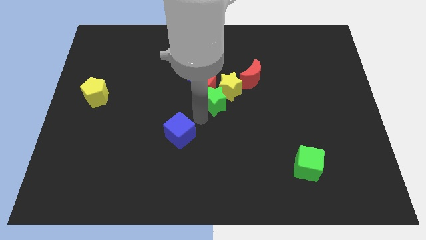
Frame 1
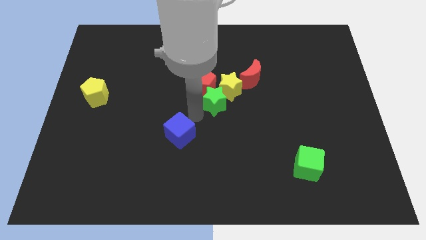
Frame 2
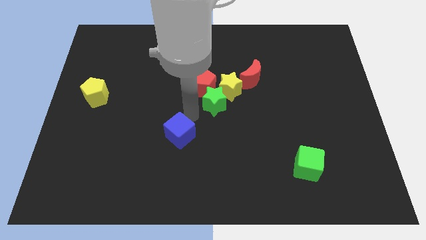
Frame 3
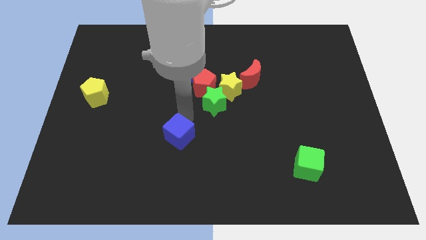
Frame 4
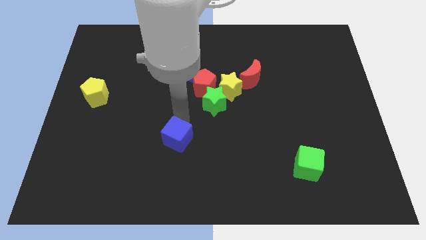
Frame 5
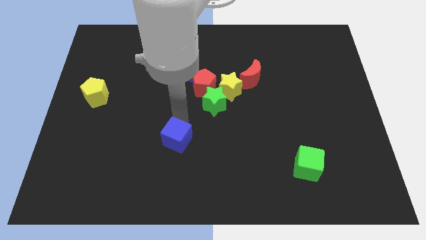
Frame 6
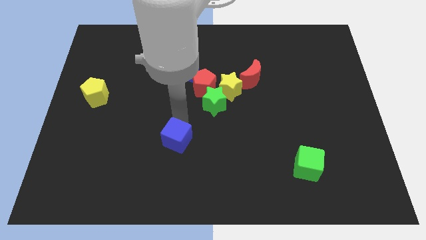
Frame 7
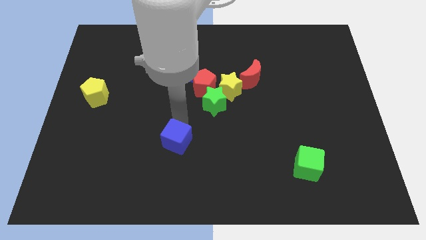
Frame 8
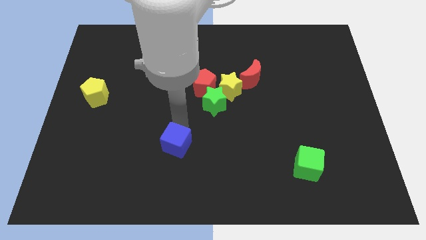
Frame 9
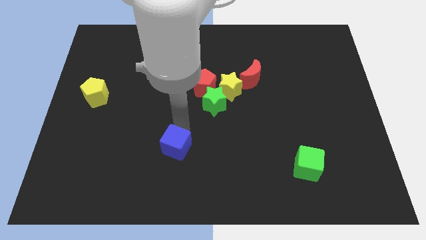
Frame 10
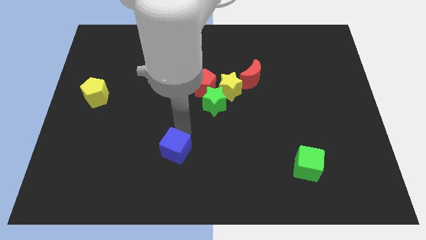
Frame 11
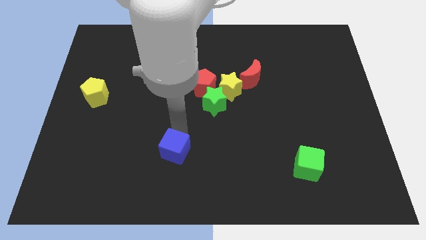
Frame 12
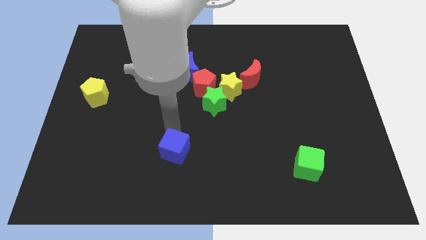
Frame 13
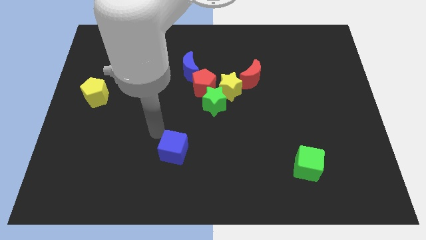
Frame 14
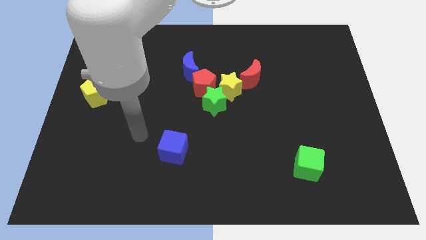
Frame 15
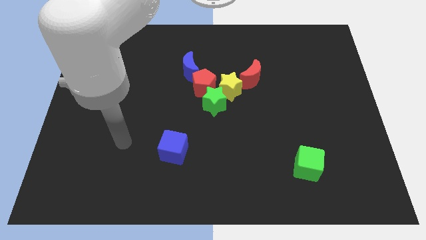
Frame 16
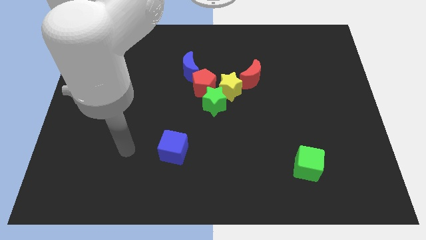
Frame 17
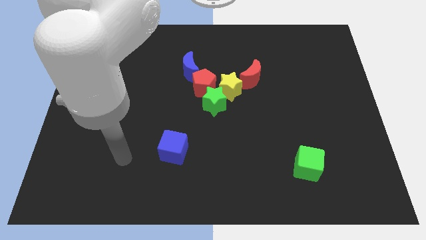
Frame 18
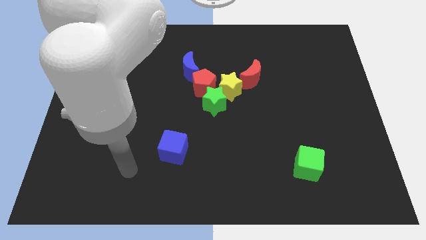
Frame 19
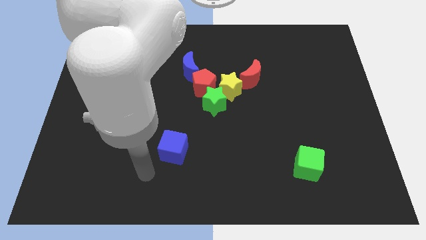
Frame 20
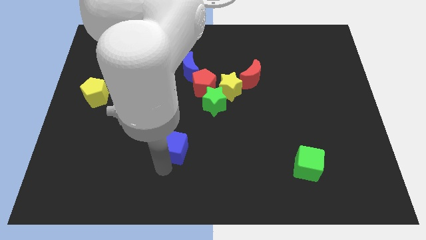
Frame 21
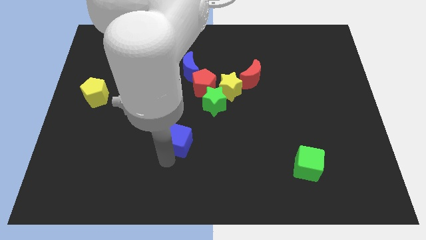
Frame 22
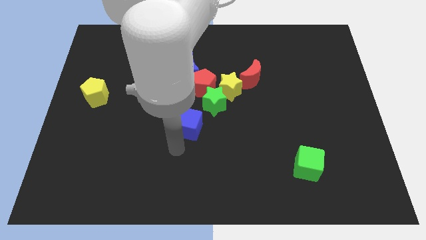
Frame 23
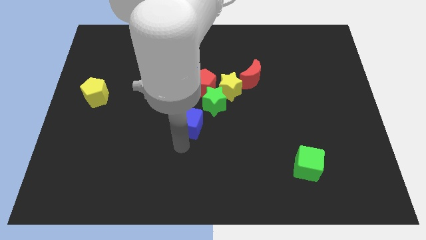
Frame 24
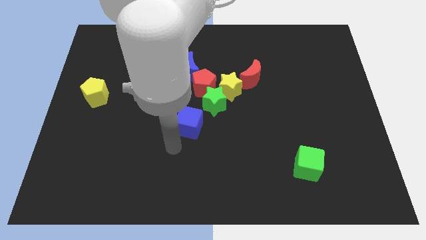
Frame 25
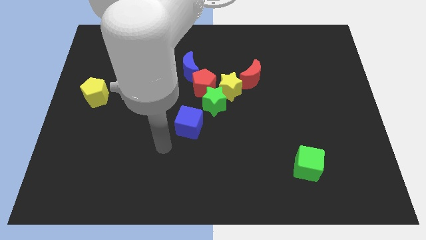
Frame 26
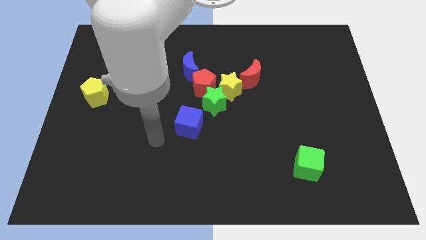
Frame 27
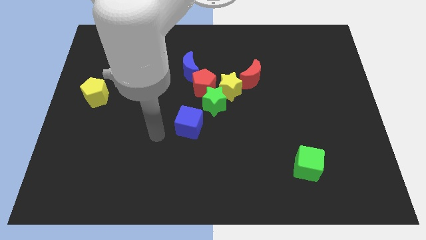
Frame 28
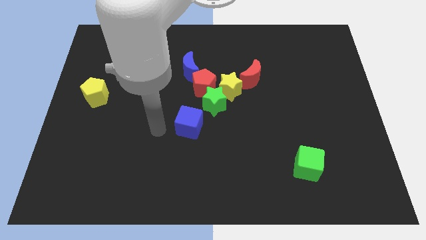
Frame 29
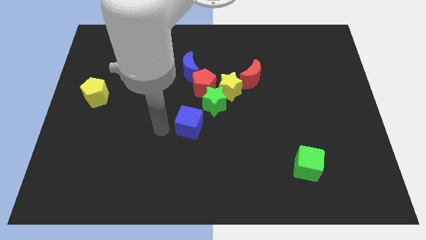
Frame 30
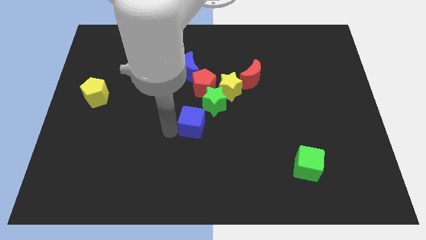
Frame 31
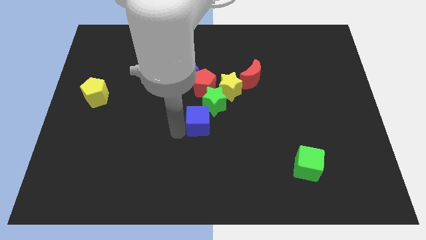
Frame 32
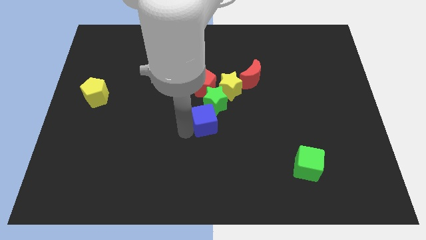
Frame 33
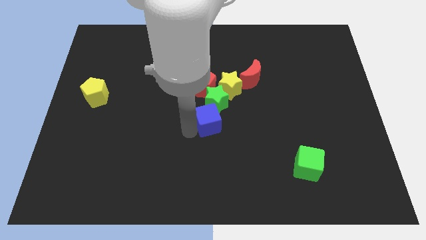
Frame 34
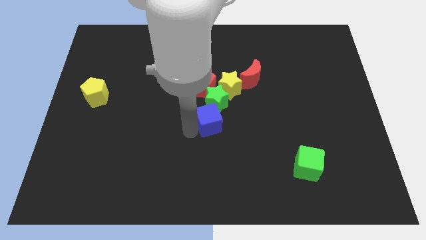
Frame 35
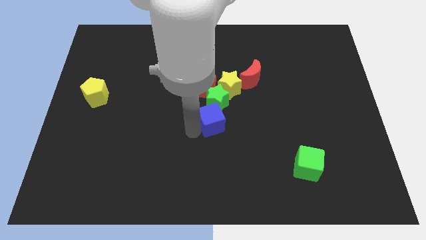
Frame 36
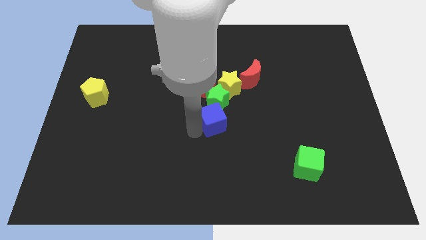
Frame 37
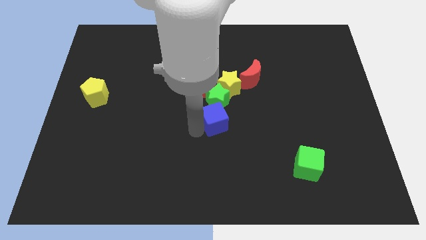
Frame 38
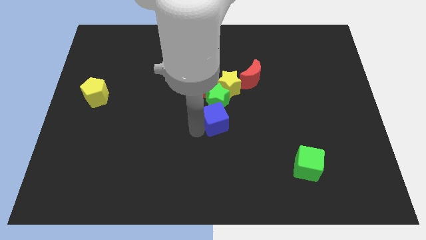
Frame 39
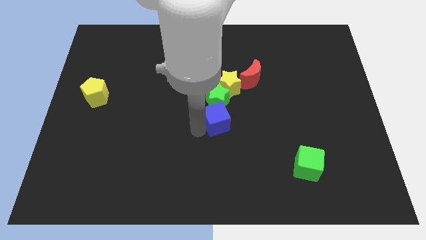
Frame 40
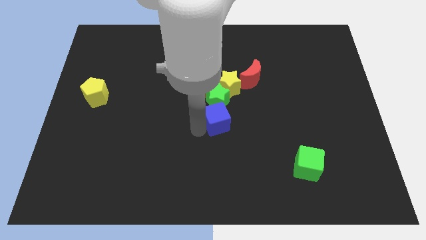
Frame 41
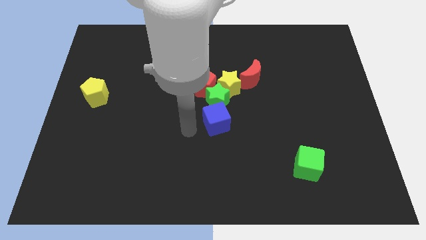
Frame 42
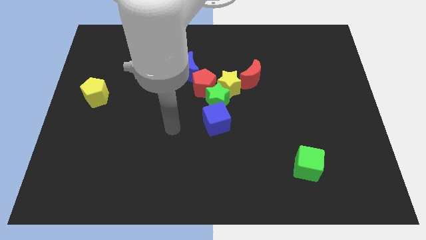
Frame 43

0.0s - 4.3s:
move blue cube to the bottom of green star

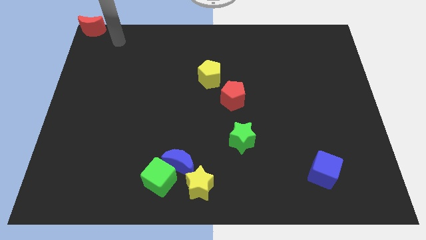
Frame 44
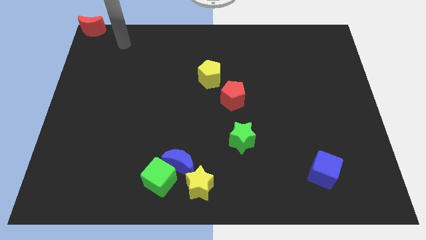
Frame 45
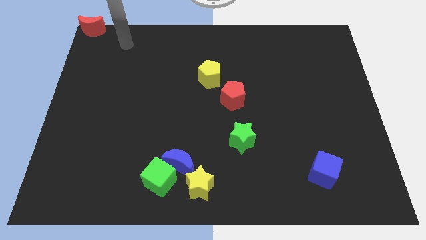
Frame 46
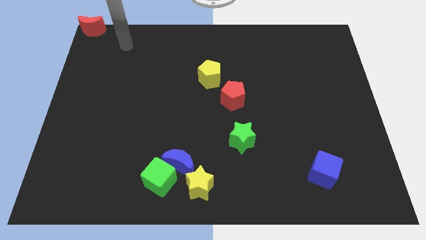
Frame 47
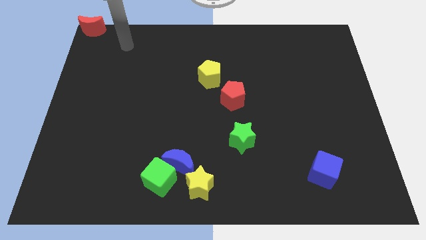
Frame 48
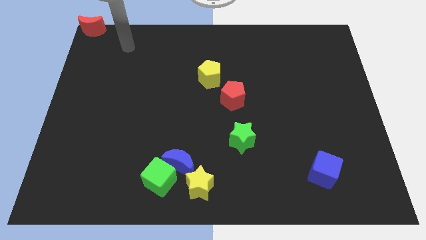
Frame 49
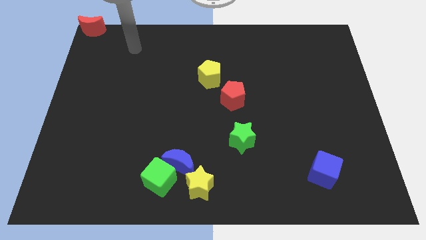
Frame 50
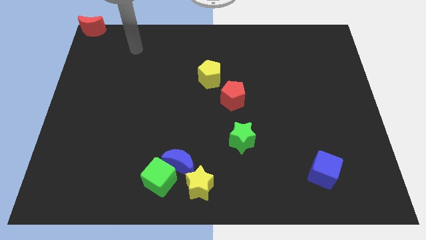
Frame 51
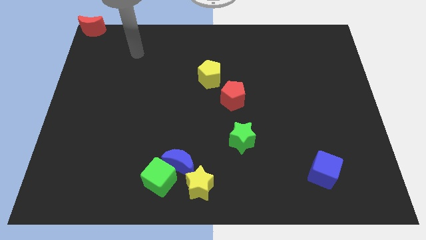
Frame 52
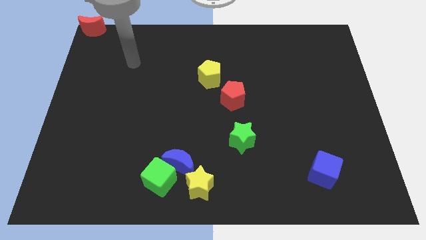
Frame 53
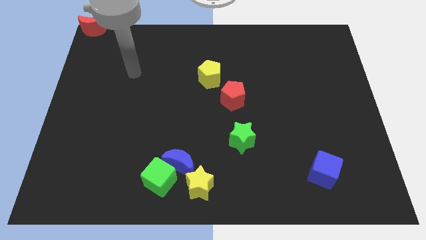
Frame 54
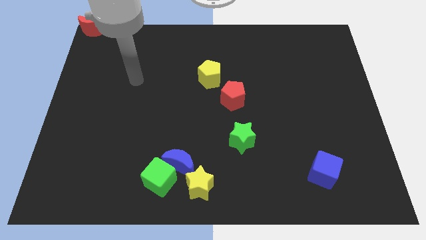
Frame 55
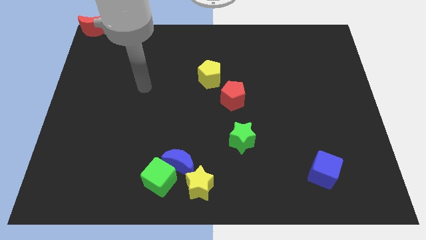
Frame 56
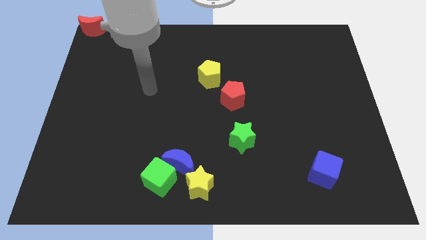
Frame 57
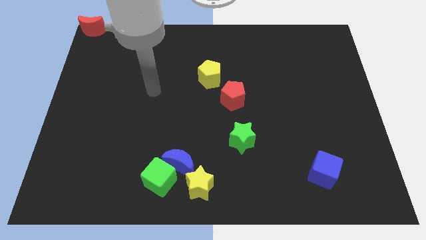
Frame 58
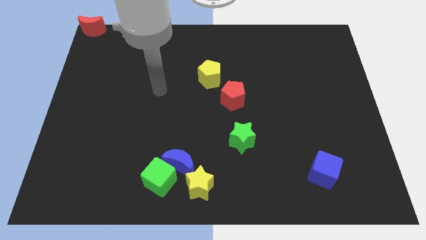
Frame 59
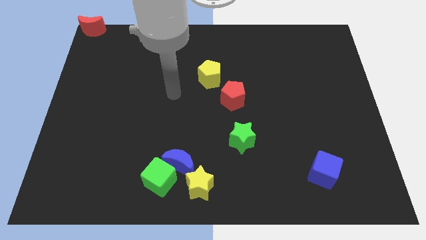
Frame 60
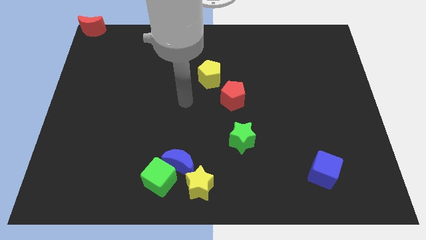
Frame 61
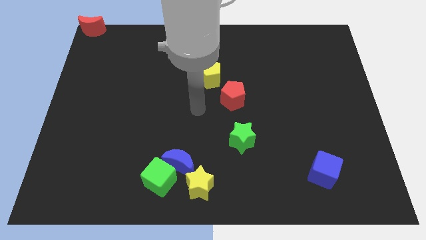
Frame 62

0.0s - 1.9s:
point your arm at the left of the red pentagon

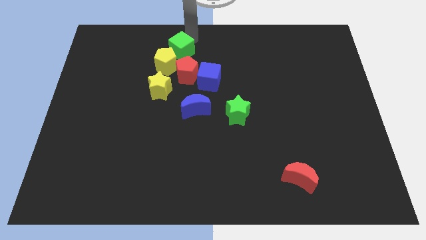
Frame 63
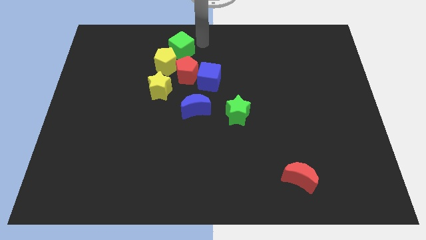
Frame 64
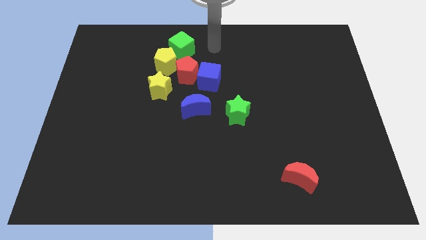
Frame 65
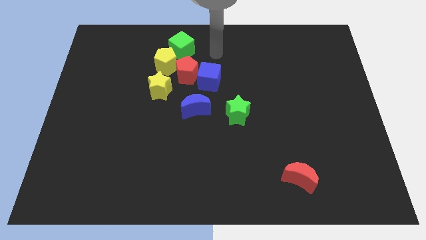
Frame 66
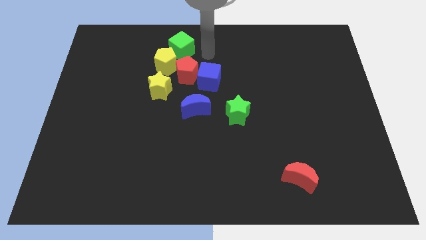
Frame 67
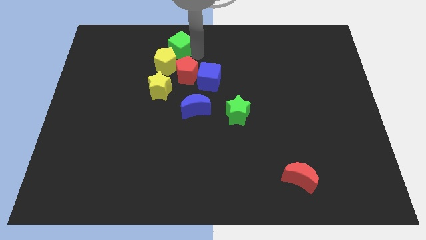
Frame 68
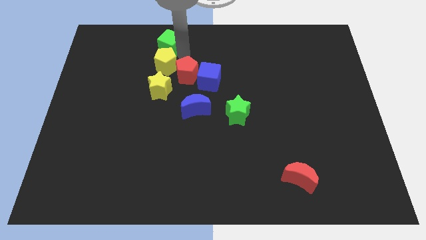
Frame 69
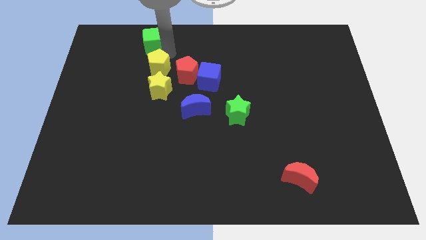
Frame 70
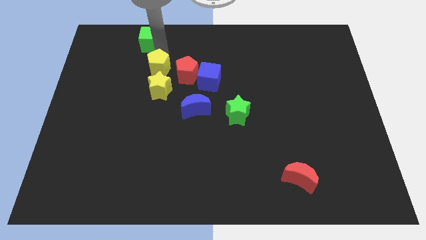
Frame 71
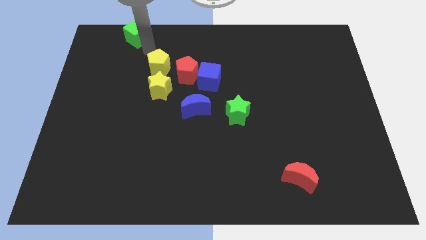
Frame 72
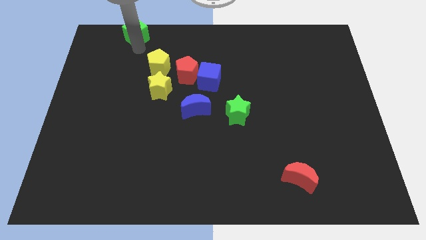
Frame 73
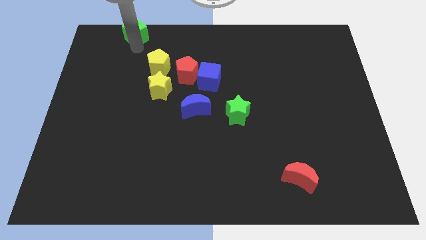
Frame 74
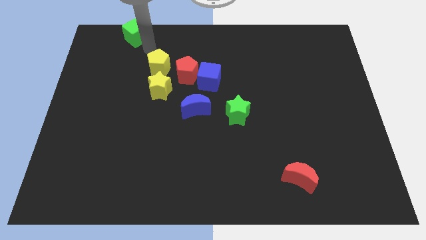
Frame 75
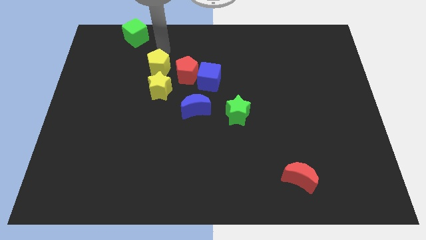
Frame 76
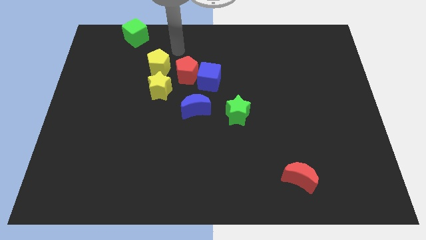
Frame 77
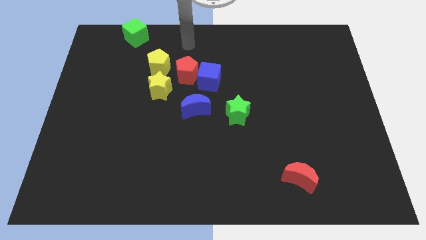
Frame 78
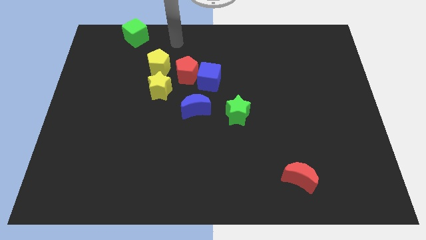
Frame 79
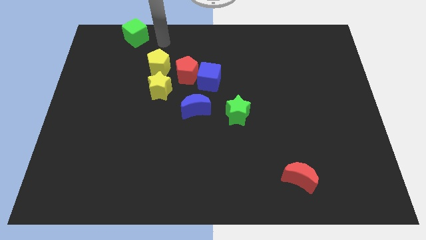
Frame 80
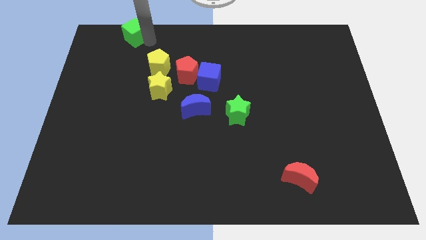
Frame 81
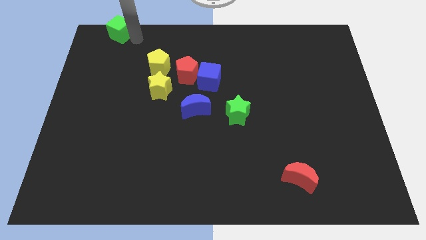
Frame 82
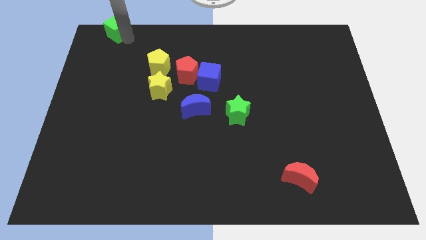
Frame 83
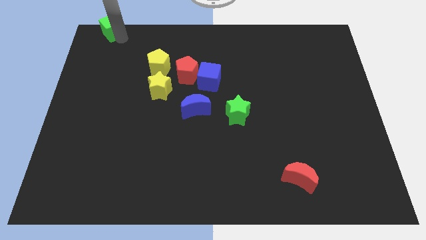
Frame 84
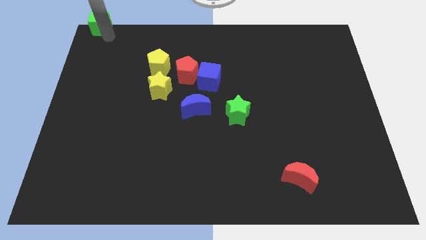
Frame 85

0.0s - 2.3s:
push the green cube towards the left side of the board

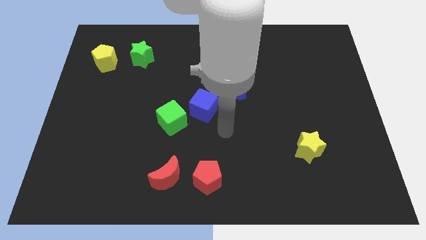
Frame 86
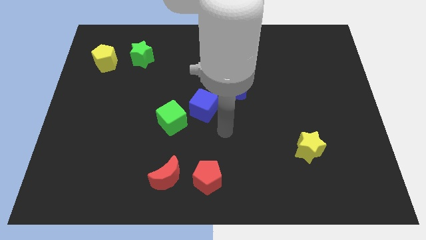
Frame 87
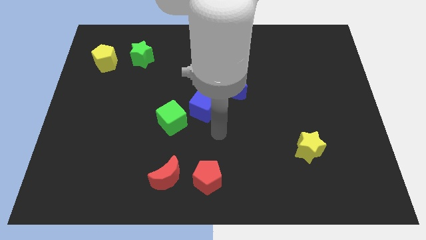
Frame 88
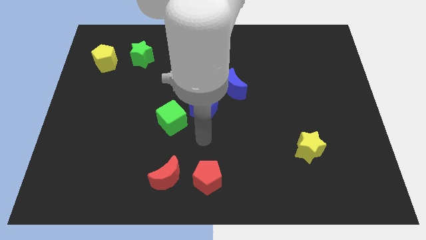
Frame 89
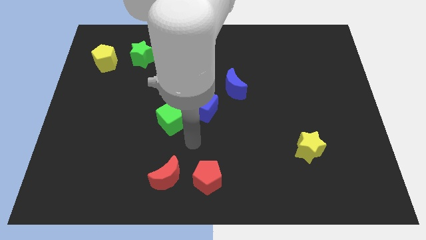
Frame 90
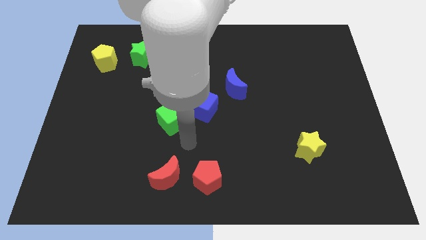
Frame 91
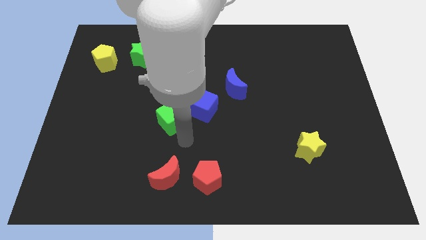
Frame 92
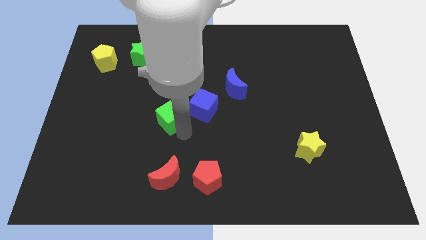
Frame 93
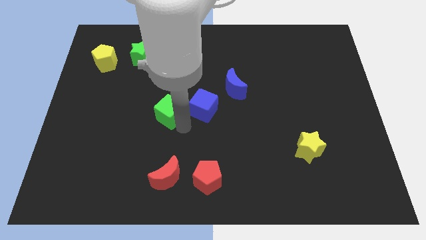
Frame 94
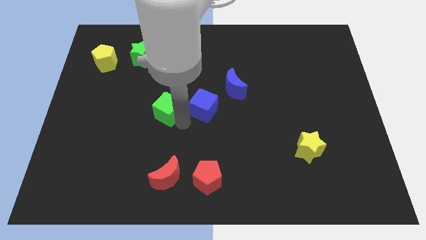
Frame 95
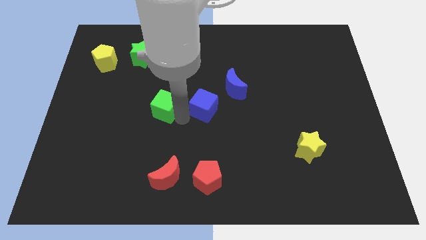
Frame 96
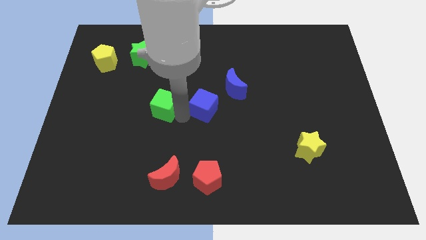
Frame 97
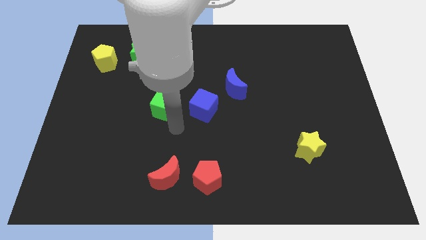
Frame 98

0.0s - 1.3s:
put the green cube left to the blue cube
